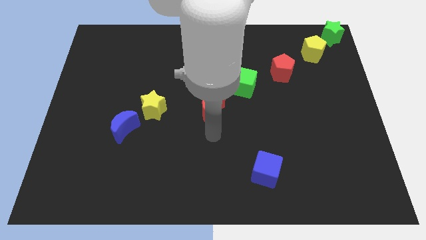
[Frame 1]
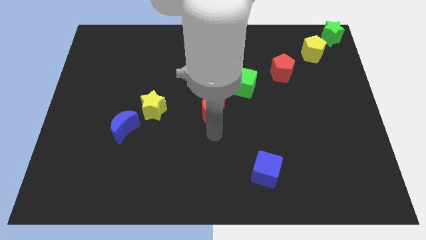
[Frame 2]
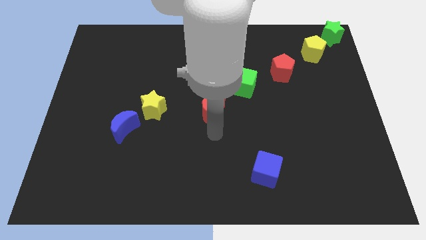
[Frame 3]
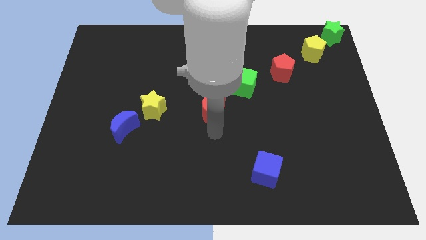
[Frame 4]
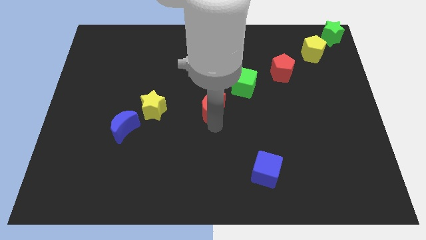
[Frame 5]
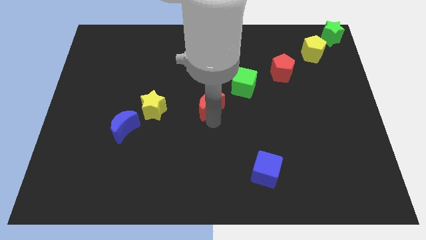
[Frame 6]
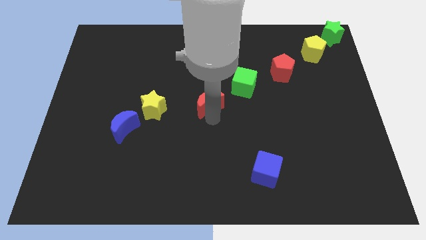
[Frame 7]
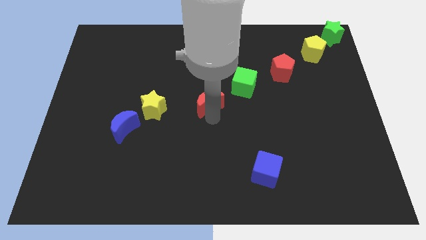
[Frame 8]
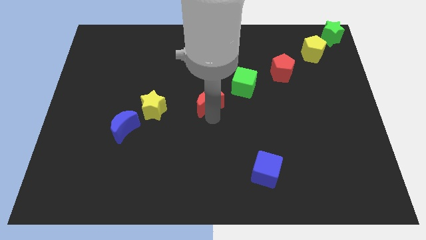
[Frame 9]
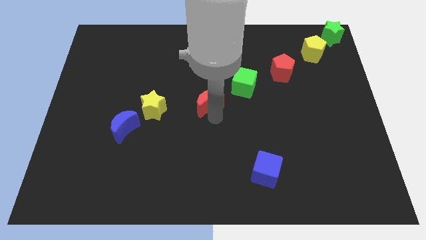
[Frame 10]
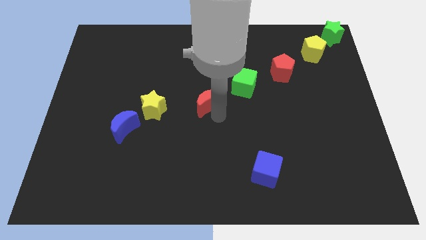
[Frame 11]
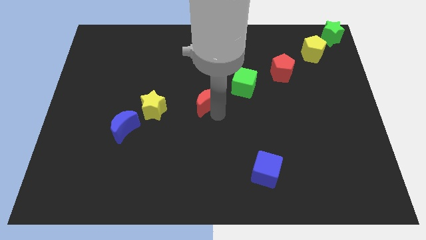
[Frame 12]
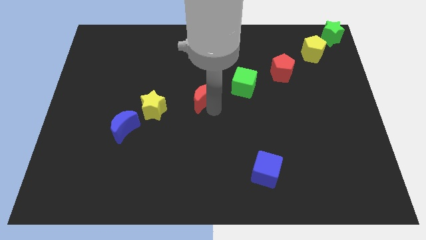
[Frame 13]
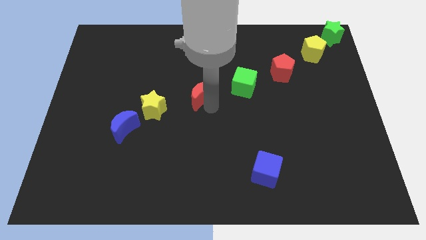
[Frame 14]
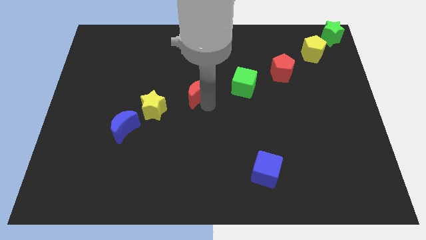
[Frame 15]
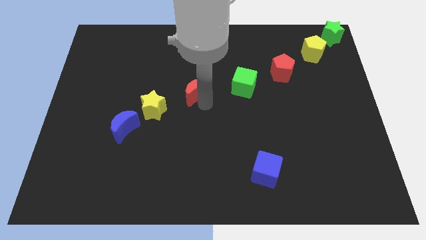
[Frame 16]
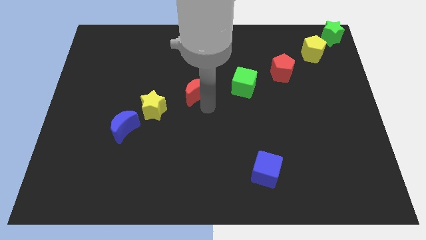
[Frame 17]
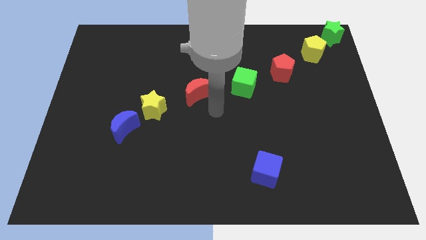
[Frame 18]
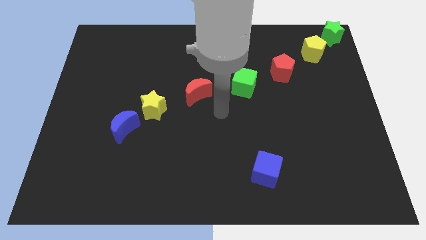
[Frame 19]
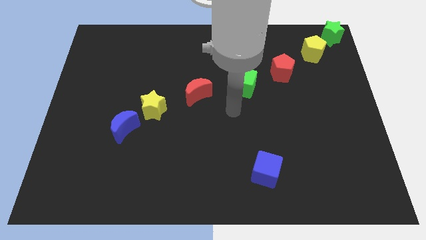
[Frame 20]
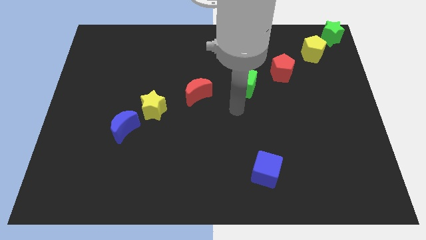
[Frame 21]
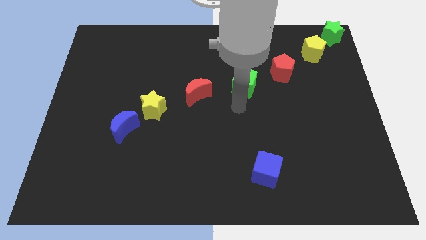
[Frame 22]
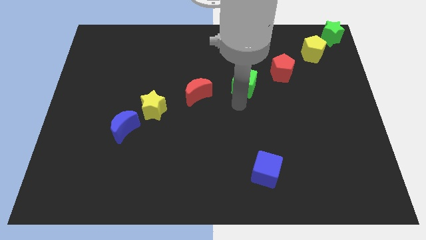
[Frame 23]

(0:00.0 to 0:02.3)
place red crescent diagonal to yellow star

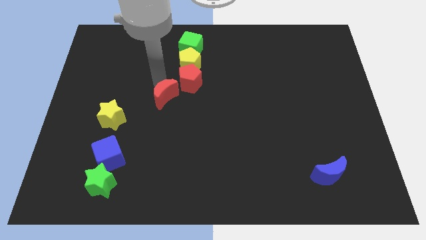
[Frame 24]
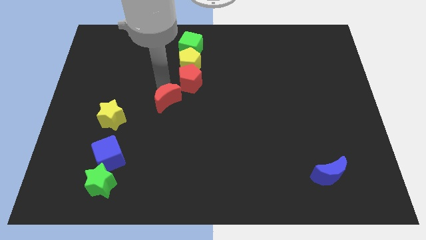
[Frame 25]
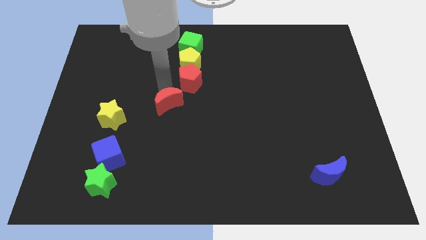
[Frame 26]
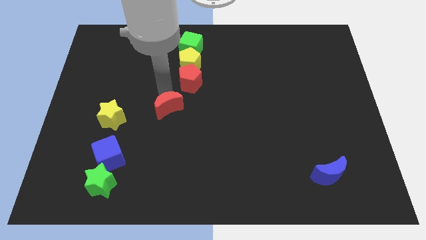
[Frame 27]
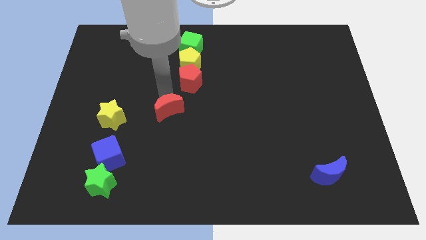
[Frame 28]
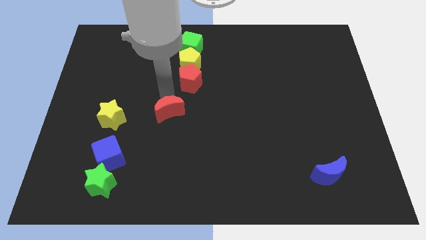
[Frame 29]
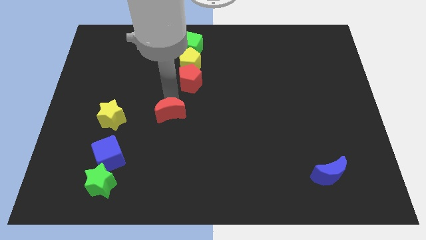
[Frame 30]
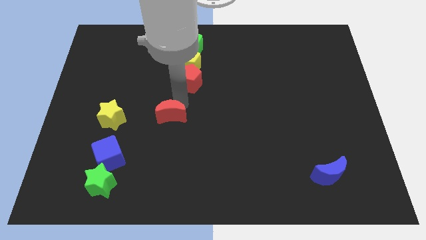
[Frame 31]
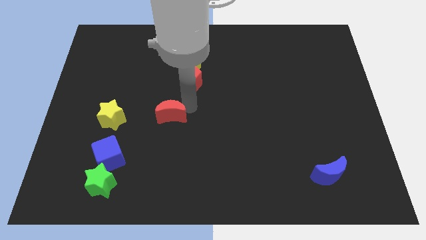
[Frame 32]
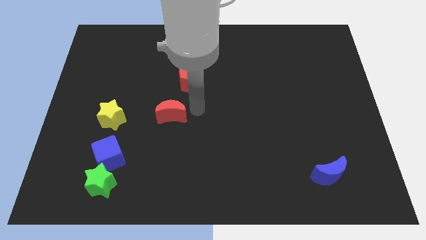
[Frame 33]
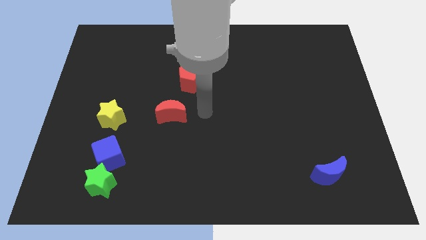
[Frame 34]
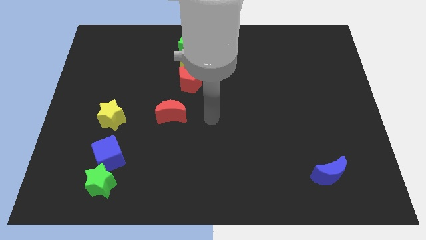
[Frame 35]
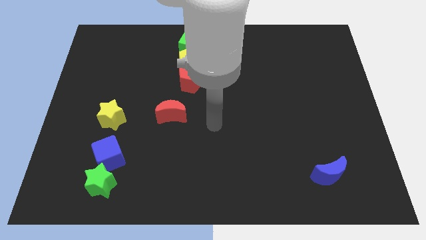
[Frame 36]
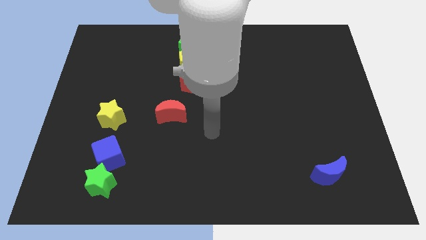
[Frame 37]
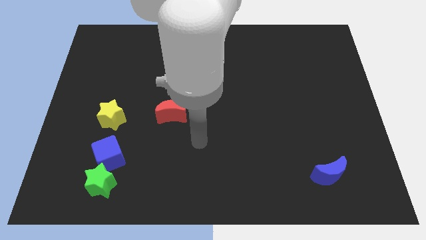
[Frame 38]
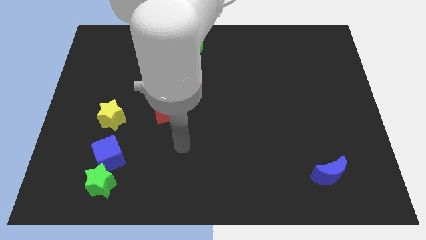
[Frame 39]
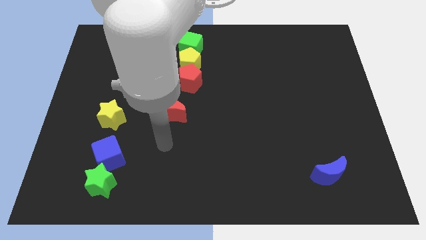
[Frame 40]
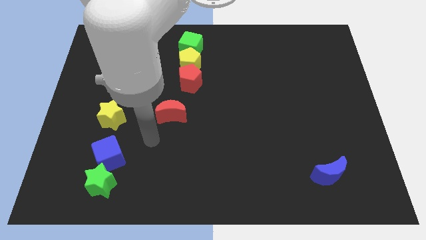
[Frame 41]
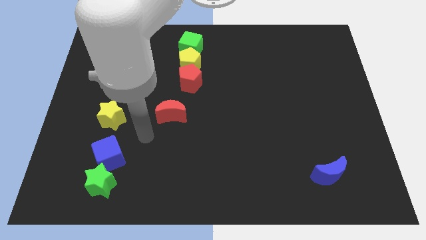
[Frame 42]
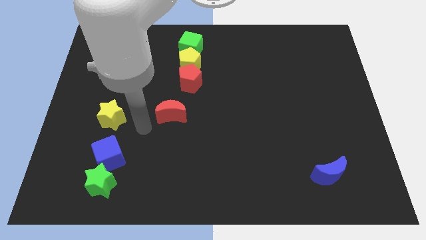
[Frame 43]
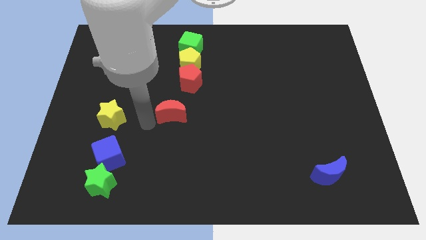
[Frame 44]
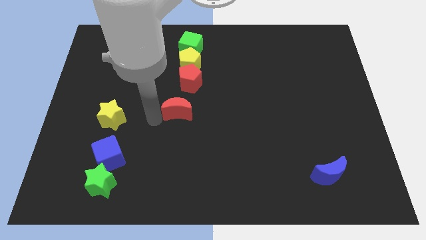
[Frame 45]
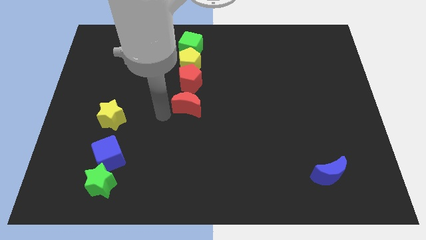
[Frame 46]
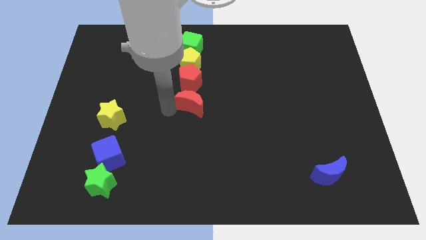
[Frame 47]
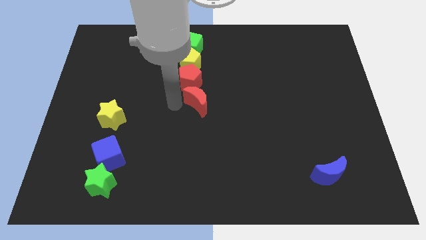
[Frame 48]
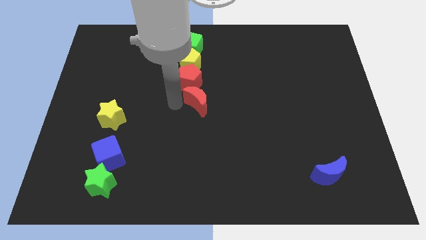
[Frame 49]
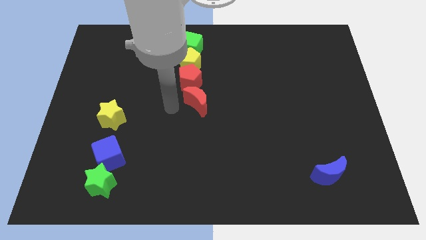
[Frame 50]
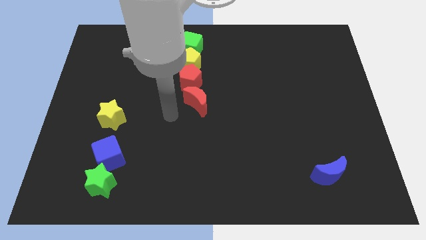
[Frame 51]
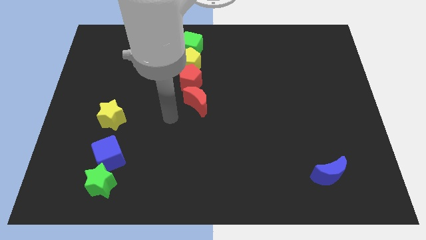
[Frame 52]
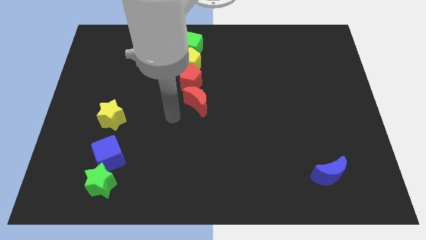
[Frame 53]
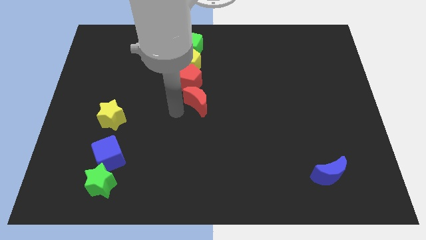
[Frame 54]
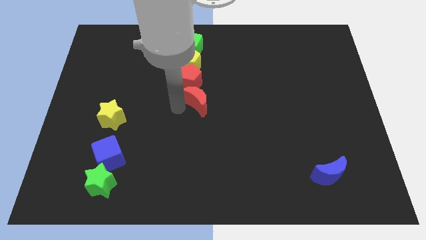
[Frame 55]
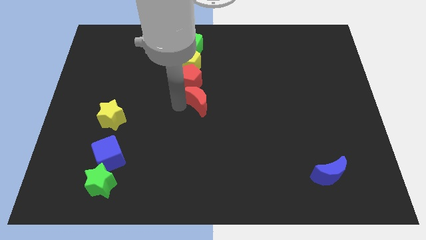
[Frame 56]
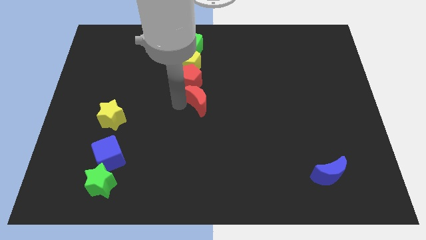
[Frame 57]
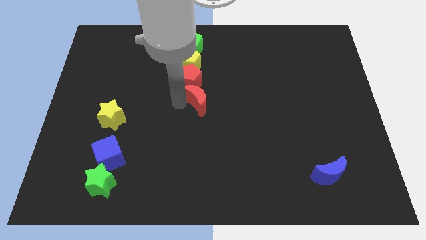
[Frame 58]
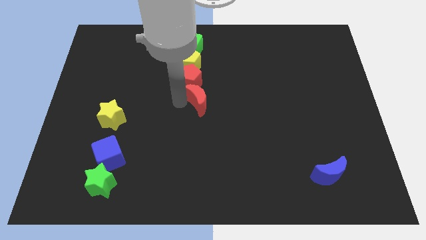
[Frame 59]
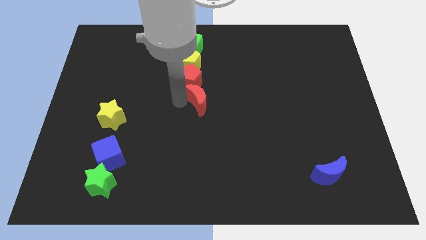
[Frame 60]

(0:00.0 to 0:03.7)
place the red moon down to the red pentagon

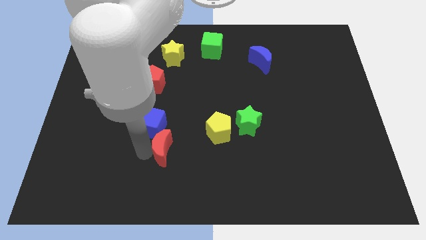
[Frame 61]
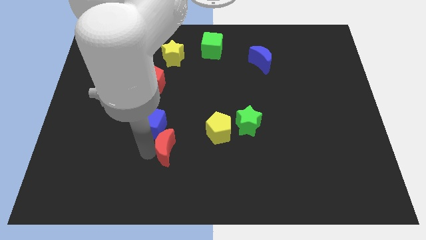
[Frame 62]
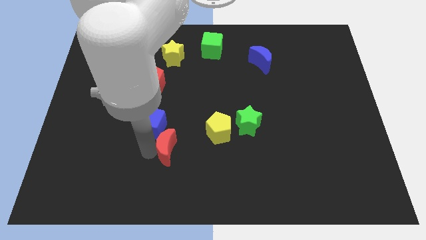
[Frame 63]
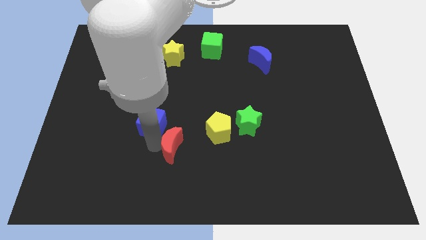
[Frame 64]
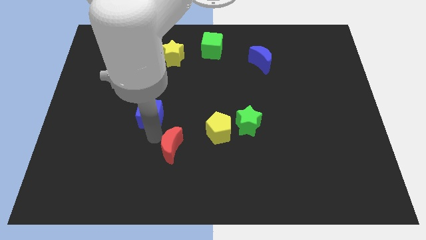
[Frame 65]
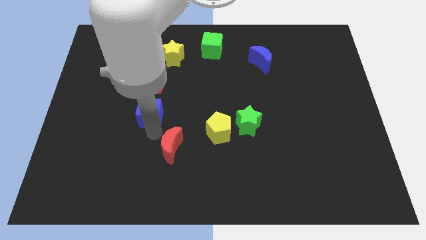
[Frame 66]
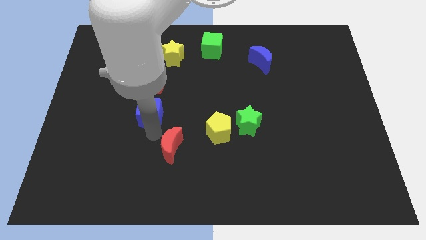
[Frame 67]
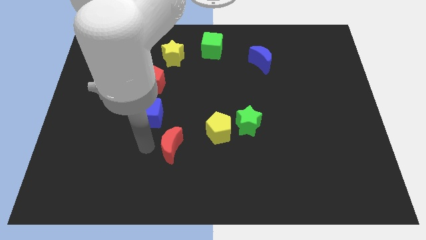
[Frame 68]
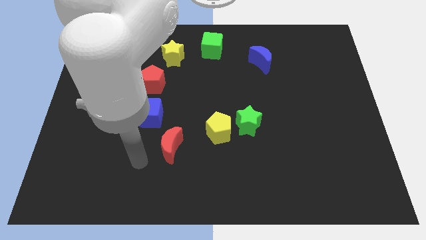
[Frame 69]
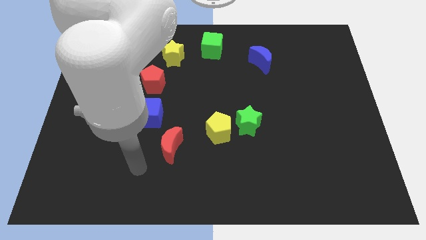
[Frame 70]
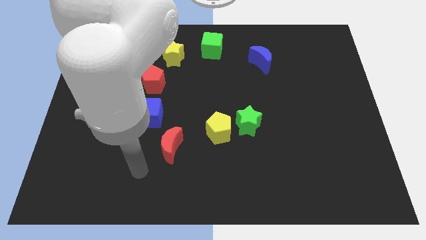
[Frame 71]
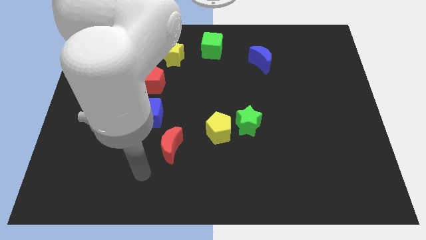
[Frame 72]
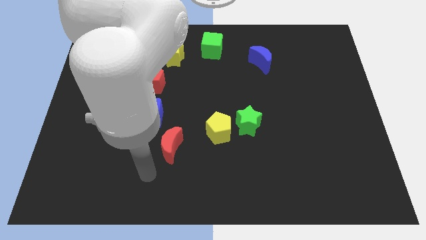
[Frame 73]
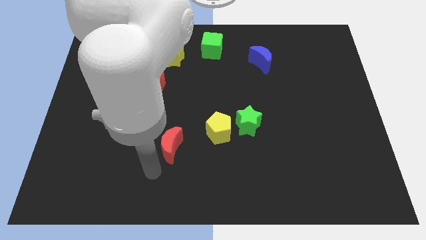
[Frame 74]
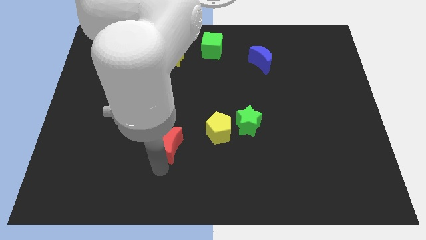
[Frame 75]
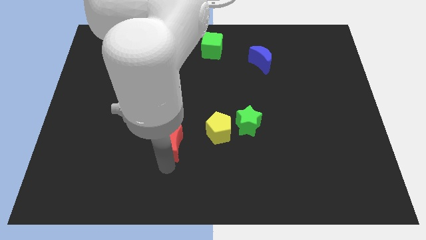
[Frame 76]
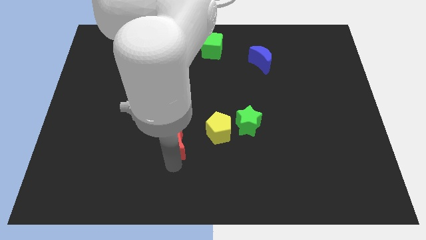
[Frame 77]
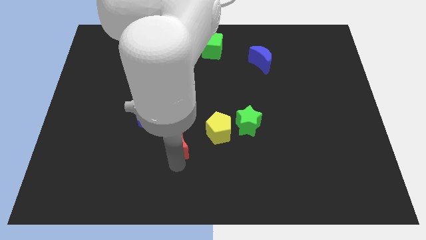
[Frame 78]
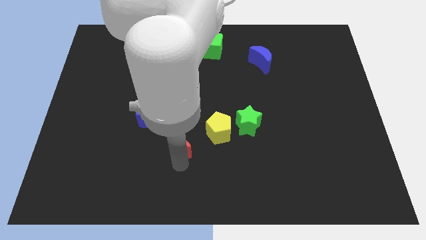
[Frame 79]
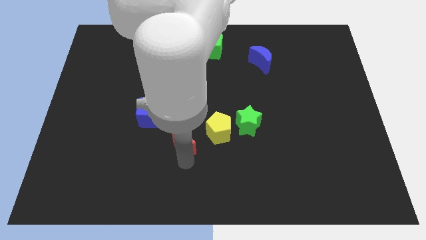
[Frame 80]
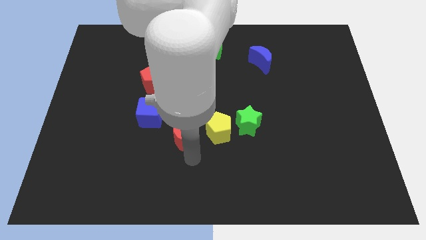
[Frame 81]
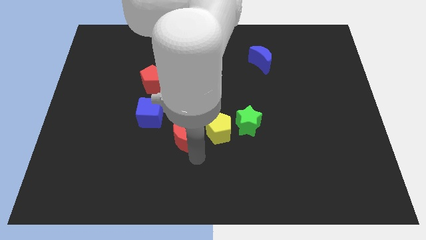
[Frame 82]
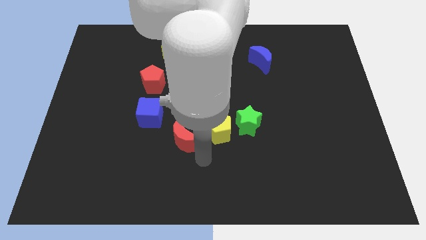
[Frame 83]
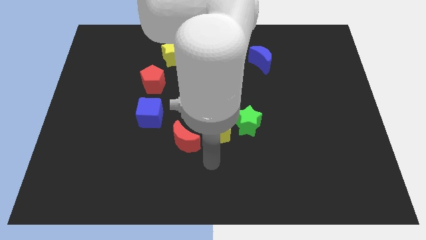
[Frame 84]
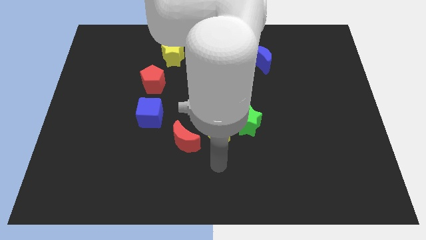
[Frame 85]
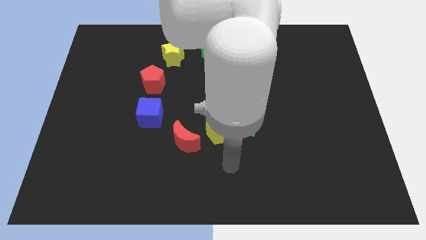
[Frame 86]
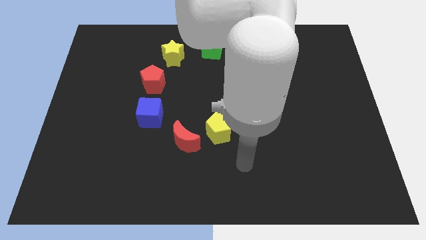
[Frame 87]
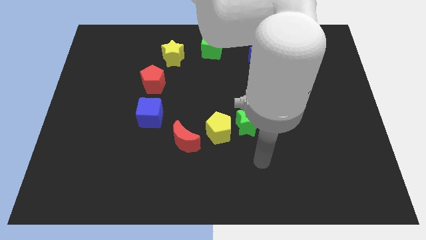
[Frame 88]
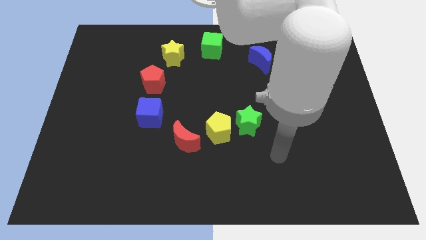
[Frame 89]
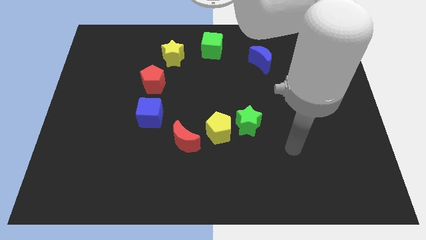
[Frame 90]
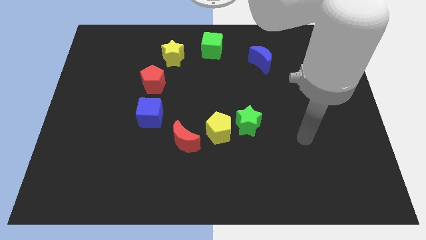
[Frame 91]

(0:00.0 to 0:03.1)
place the red moon in between the blue cube and the yellow pentagon
